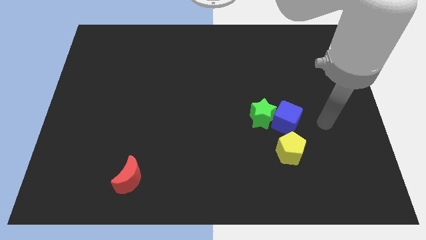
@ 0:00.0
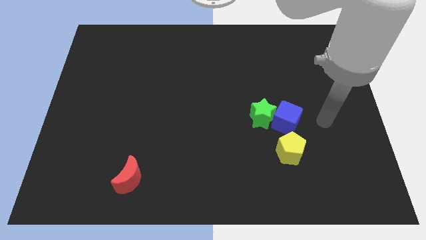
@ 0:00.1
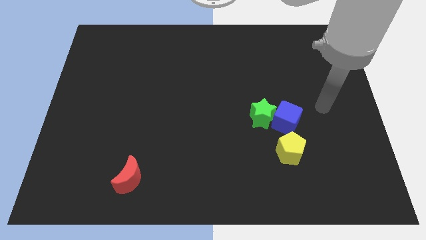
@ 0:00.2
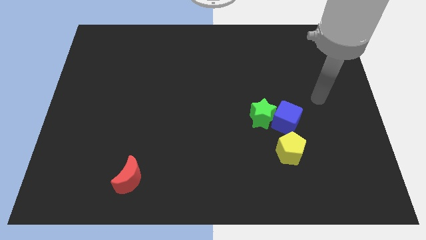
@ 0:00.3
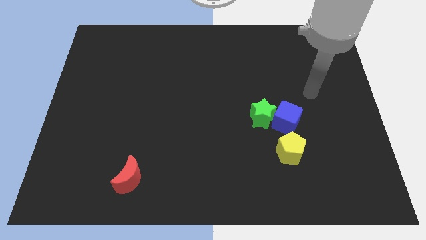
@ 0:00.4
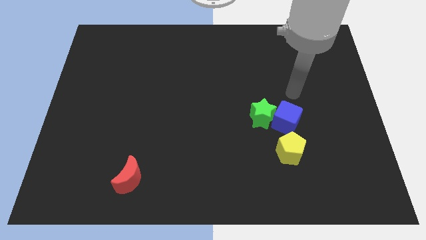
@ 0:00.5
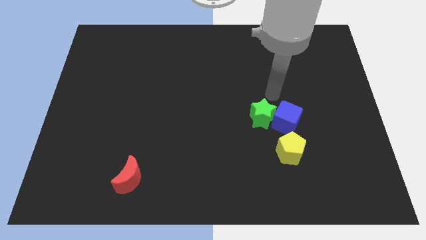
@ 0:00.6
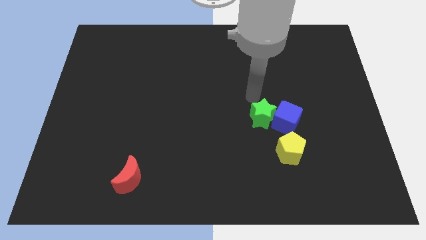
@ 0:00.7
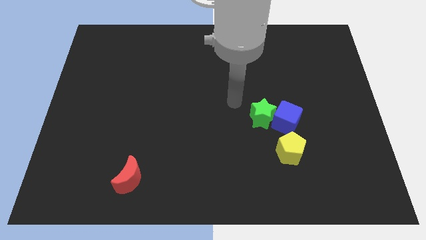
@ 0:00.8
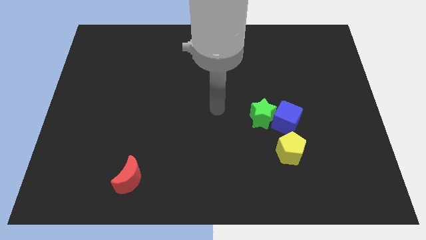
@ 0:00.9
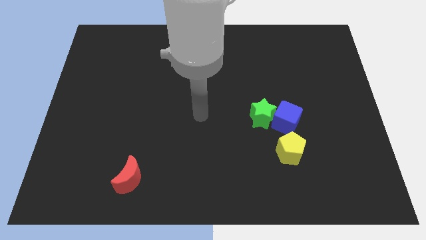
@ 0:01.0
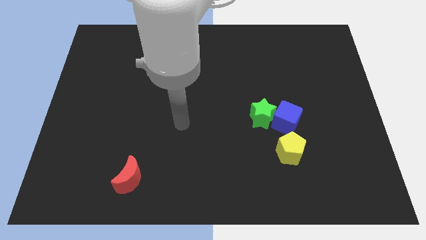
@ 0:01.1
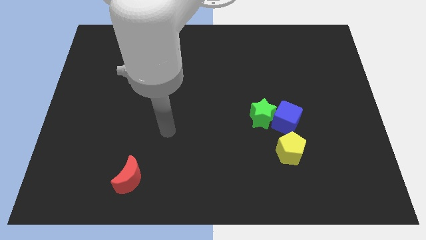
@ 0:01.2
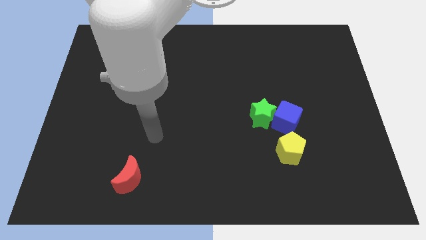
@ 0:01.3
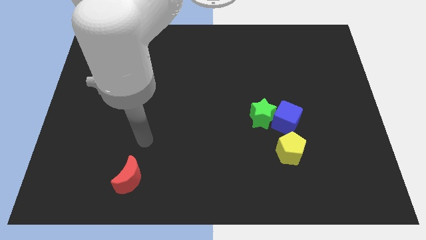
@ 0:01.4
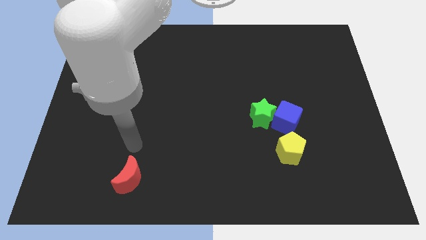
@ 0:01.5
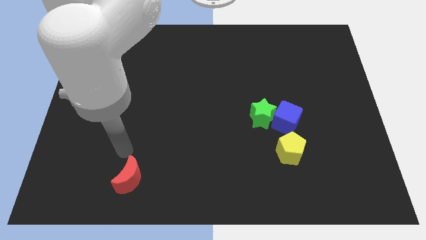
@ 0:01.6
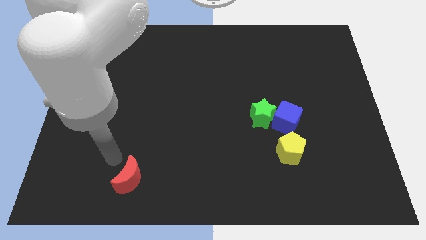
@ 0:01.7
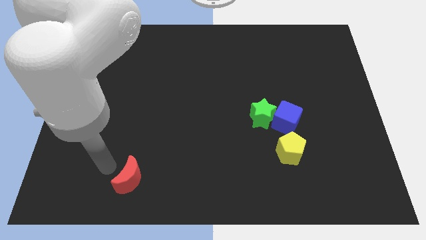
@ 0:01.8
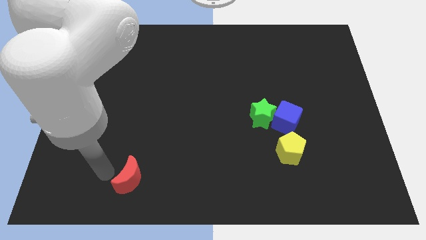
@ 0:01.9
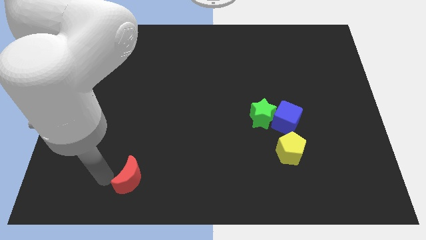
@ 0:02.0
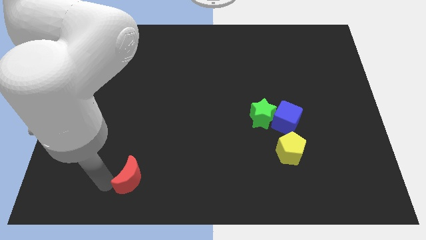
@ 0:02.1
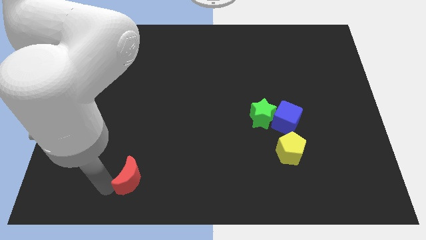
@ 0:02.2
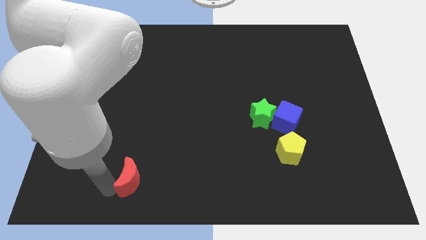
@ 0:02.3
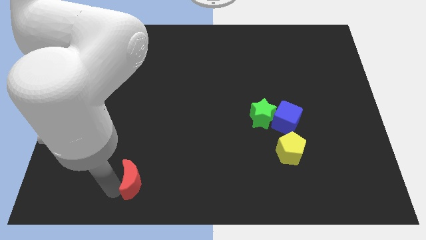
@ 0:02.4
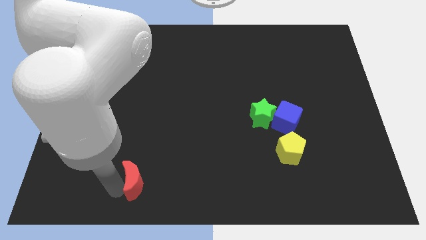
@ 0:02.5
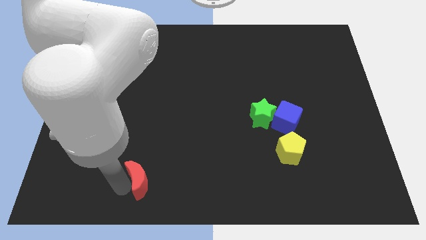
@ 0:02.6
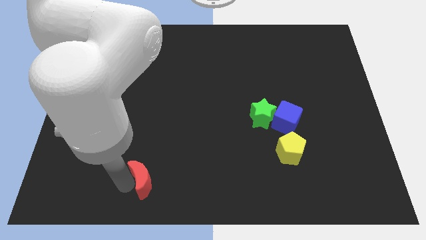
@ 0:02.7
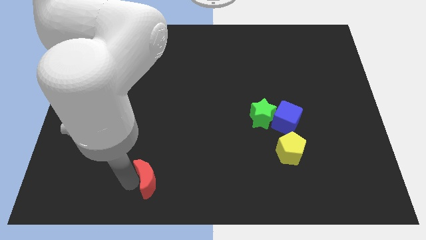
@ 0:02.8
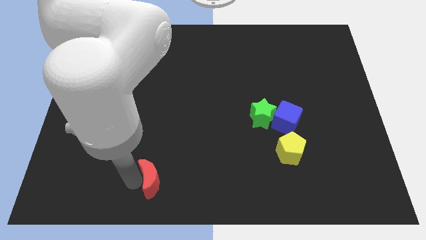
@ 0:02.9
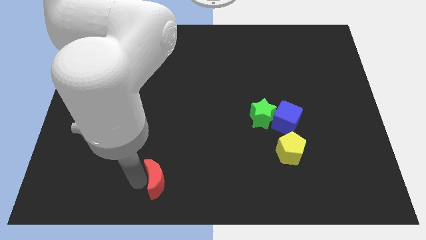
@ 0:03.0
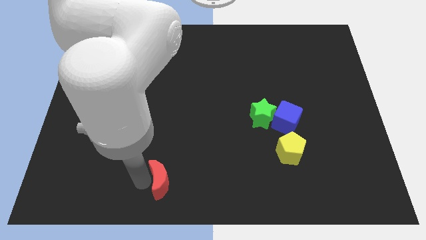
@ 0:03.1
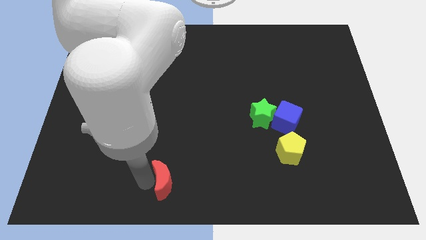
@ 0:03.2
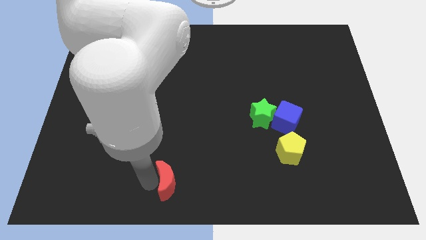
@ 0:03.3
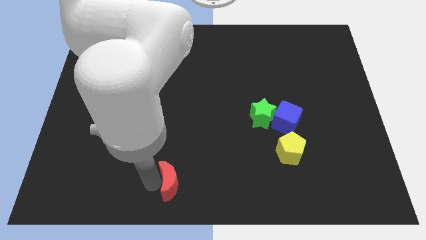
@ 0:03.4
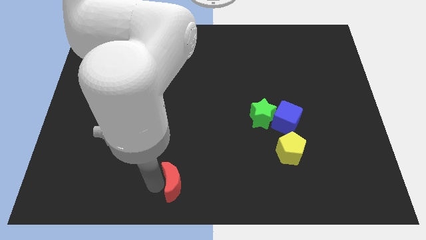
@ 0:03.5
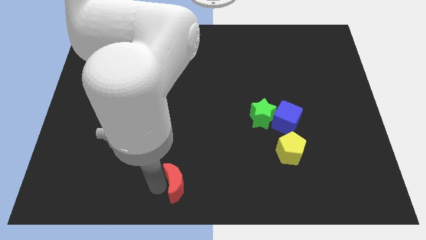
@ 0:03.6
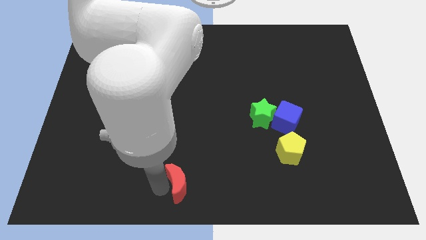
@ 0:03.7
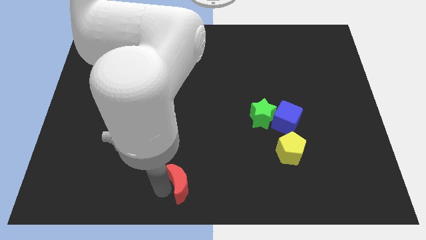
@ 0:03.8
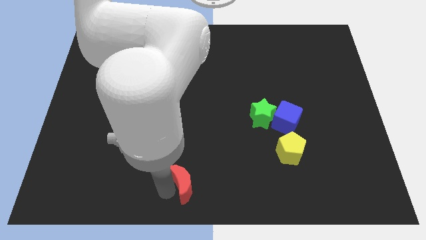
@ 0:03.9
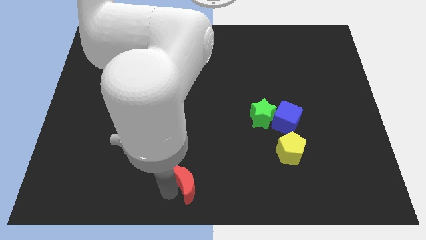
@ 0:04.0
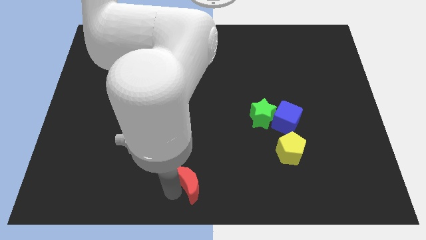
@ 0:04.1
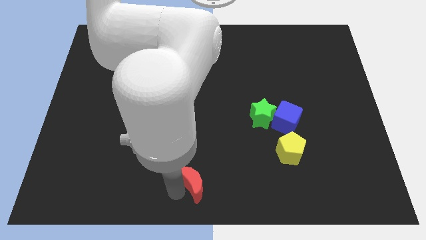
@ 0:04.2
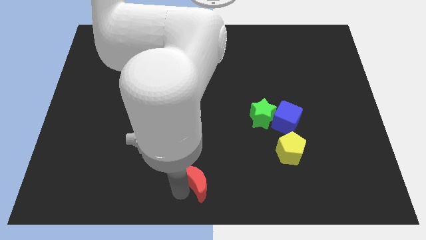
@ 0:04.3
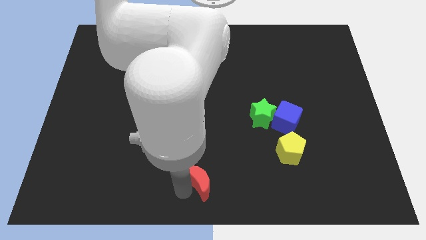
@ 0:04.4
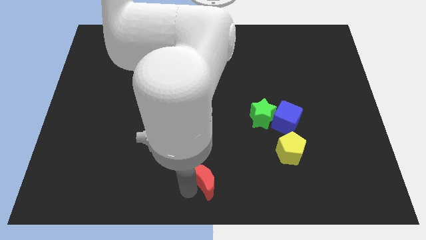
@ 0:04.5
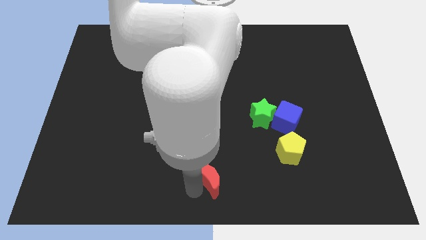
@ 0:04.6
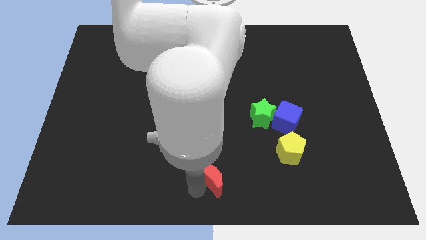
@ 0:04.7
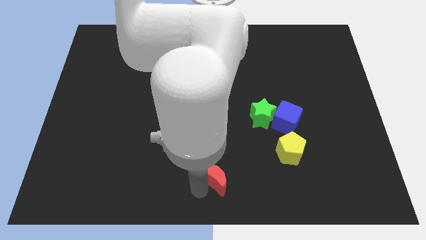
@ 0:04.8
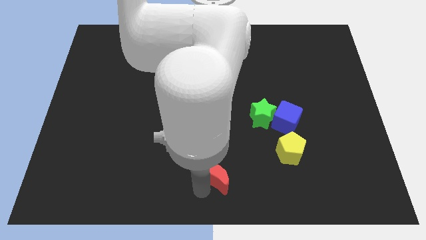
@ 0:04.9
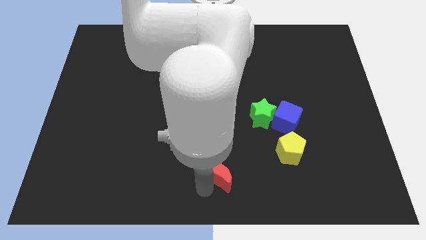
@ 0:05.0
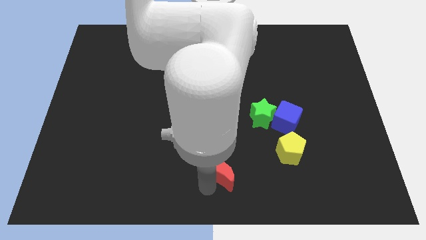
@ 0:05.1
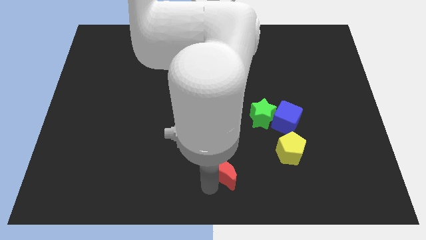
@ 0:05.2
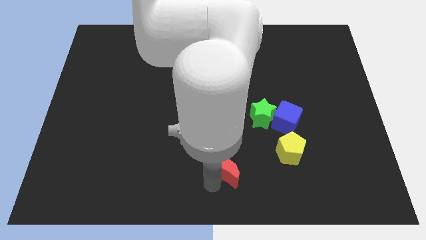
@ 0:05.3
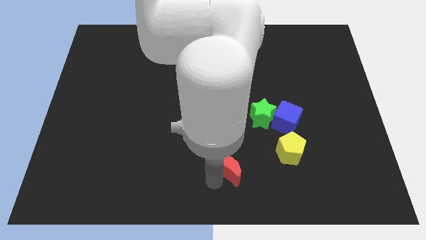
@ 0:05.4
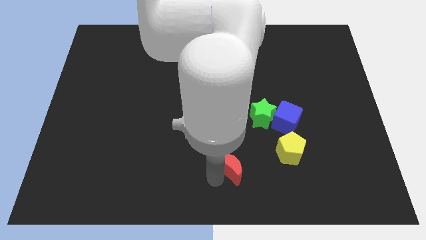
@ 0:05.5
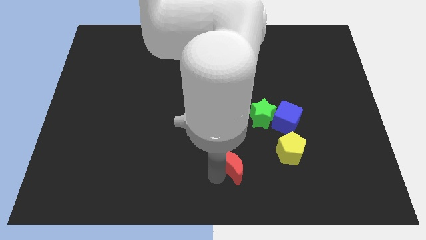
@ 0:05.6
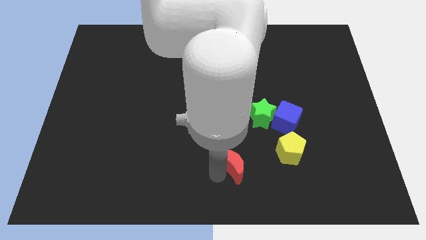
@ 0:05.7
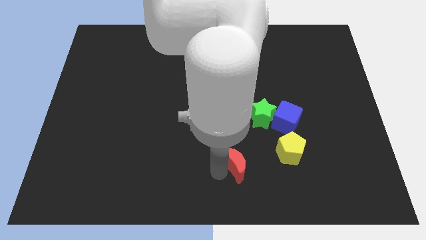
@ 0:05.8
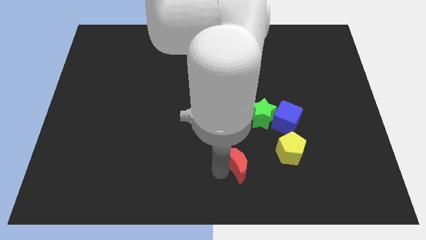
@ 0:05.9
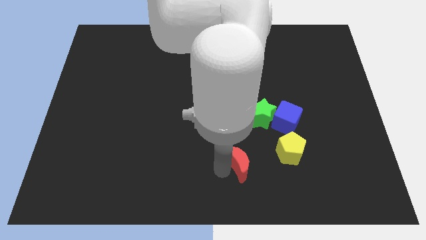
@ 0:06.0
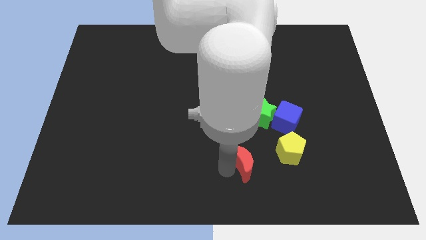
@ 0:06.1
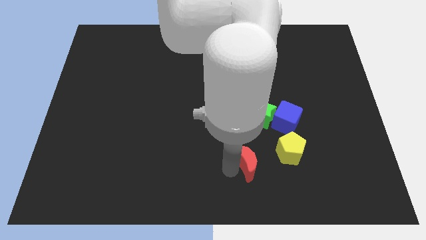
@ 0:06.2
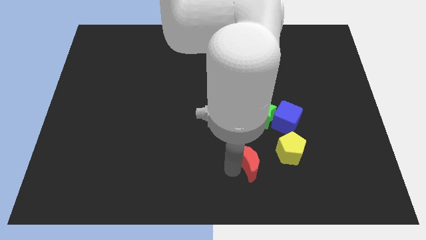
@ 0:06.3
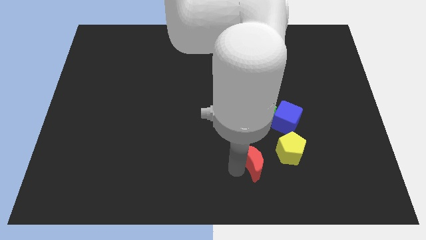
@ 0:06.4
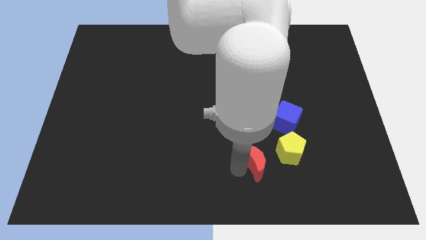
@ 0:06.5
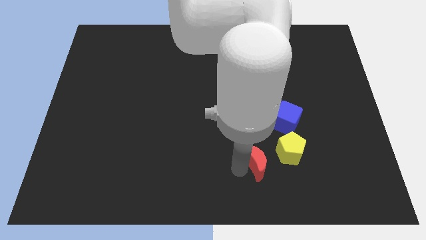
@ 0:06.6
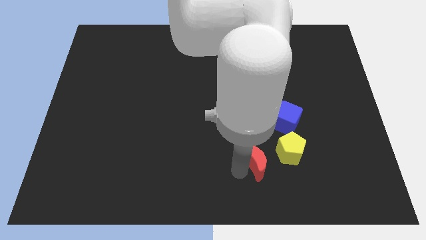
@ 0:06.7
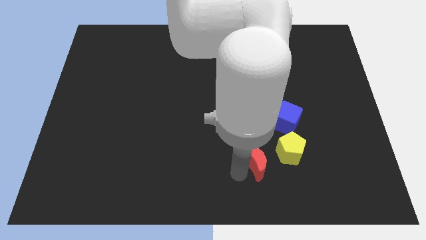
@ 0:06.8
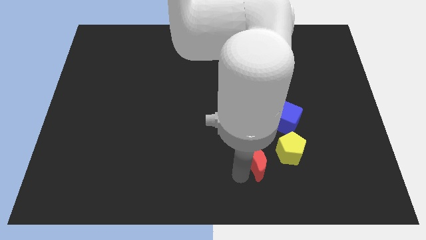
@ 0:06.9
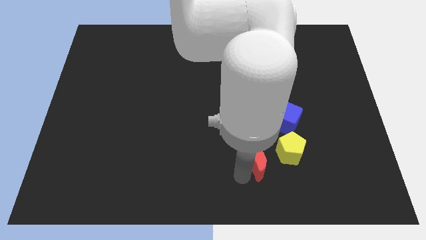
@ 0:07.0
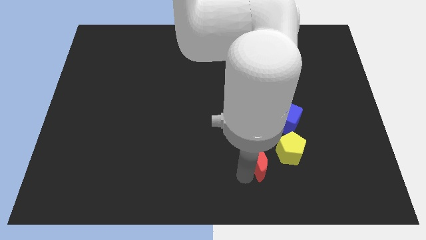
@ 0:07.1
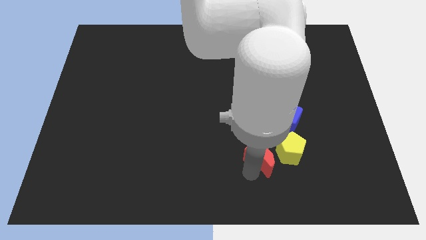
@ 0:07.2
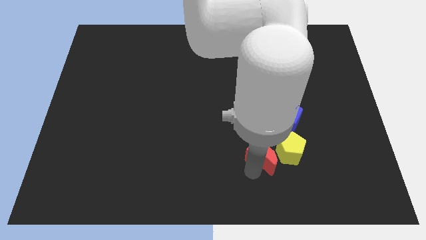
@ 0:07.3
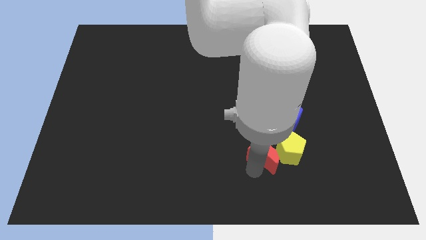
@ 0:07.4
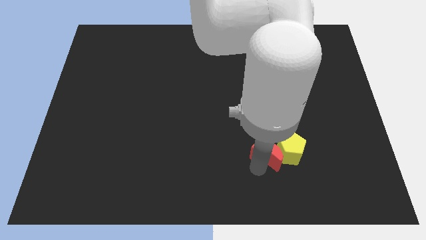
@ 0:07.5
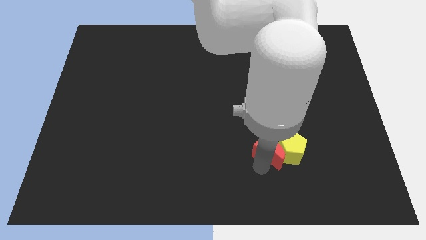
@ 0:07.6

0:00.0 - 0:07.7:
put the red block next to the yellow block

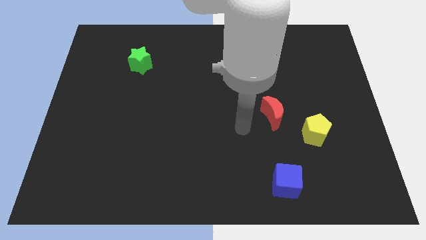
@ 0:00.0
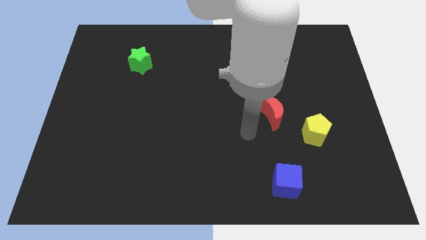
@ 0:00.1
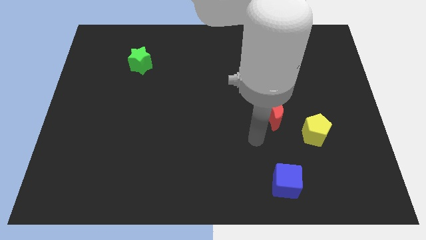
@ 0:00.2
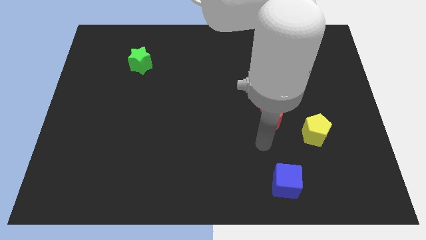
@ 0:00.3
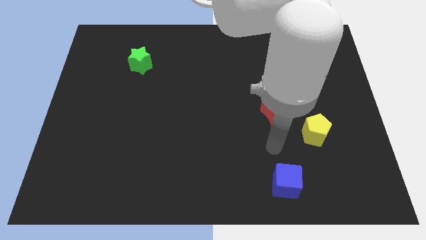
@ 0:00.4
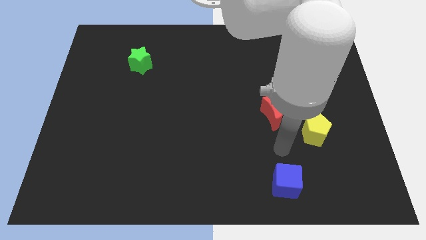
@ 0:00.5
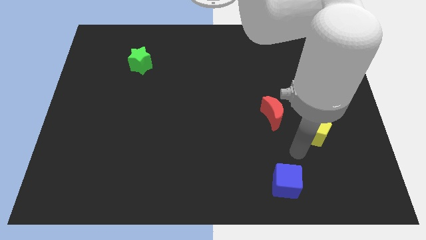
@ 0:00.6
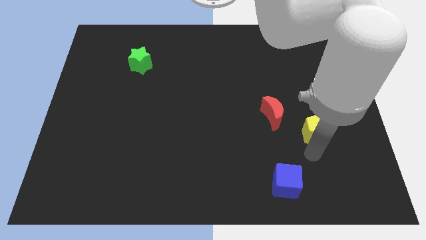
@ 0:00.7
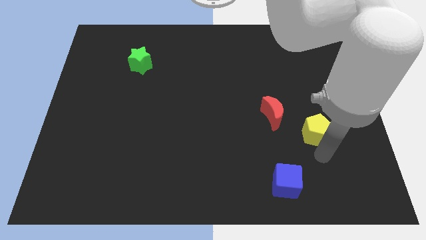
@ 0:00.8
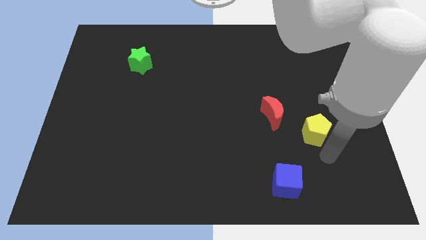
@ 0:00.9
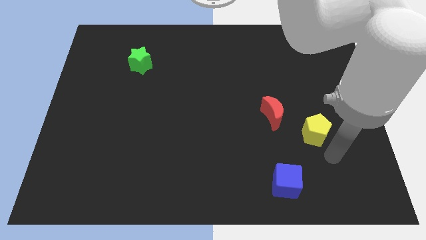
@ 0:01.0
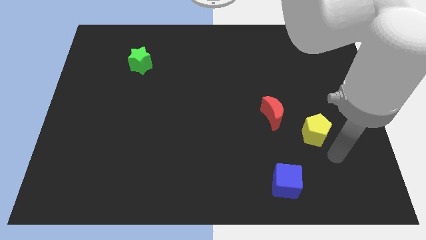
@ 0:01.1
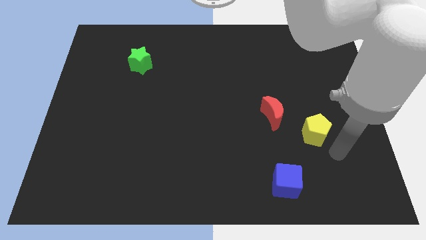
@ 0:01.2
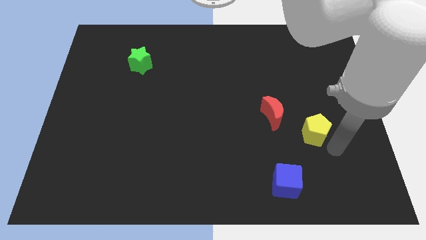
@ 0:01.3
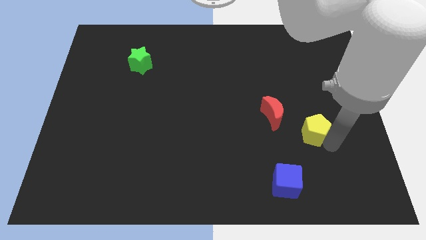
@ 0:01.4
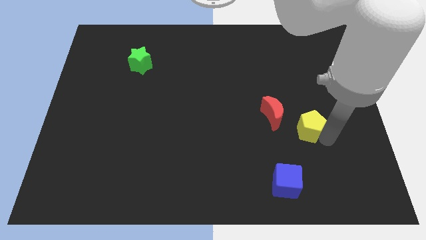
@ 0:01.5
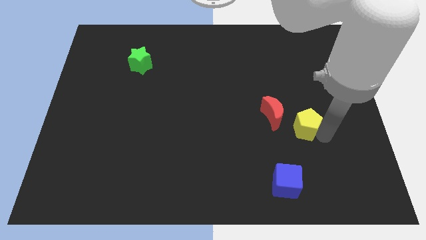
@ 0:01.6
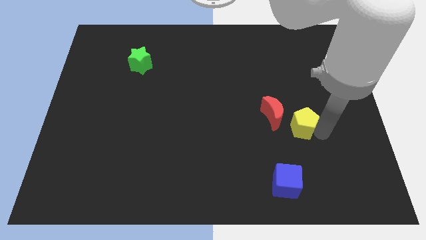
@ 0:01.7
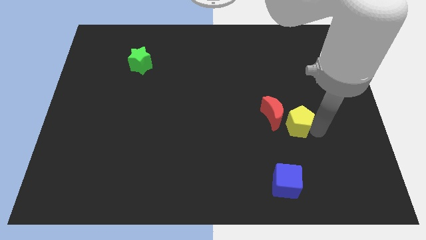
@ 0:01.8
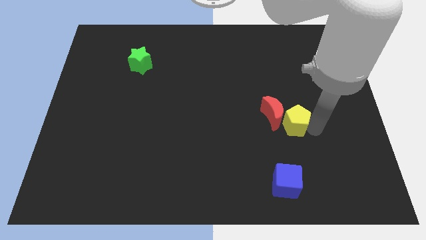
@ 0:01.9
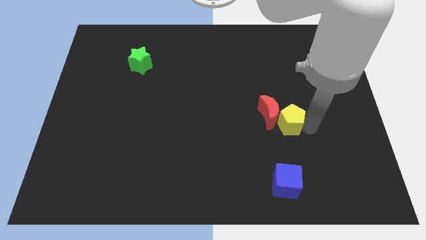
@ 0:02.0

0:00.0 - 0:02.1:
put the pentagon close to the red block
